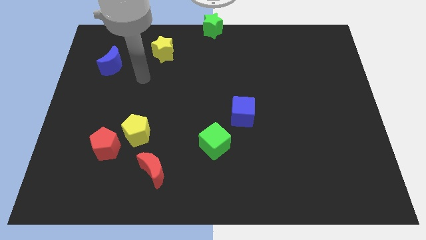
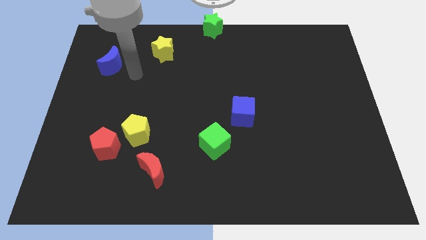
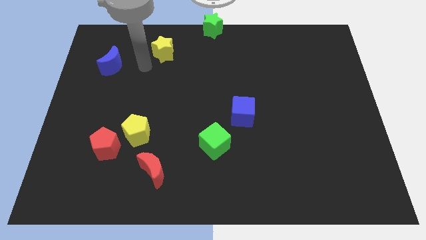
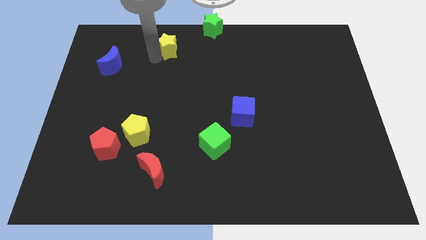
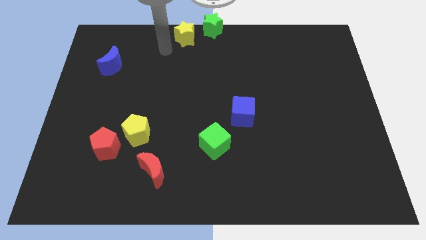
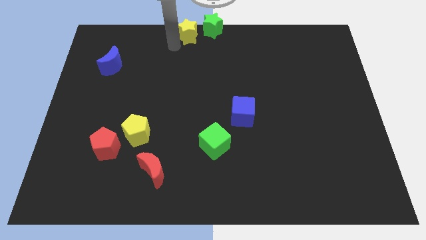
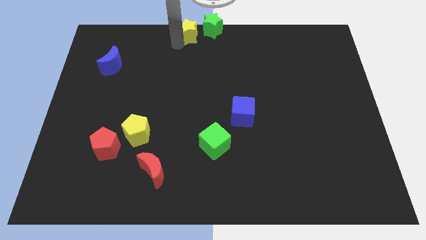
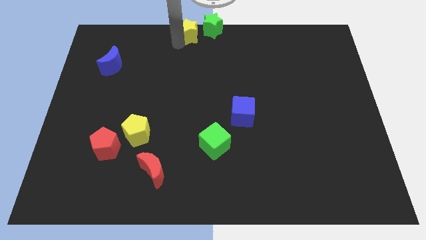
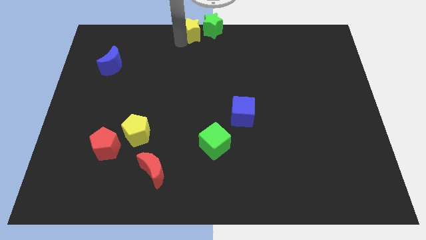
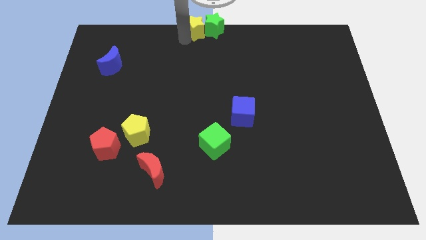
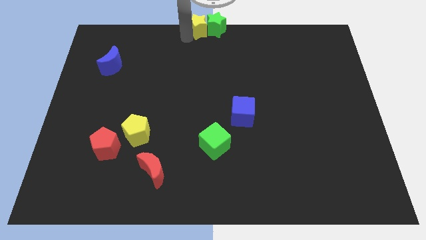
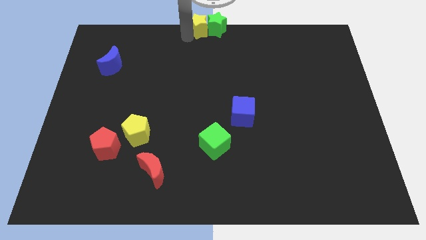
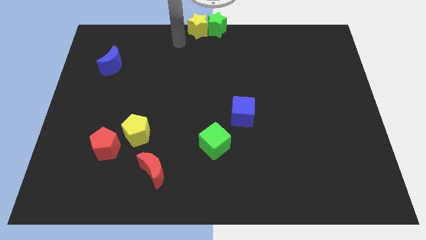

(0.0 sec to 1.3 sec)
move the yellow star towards the left side of the green star

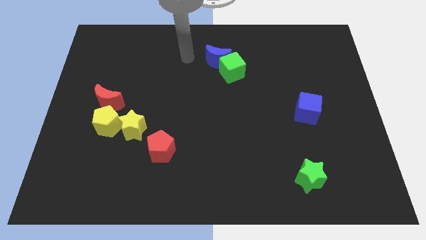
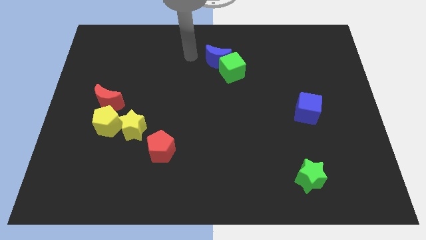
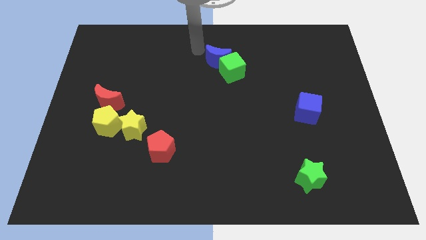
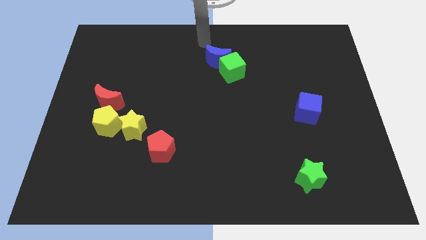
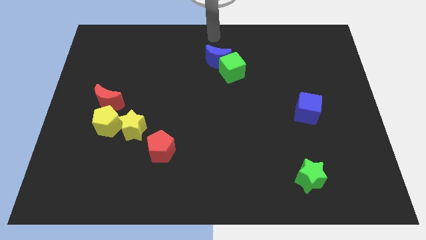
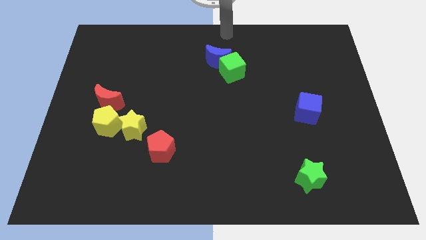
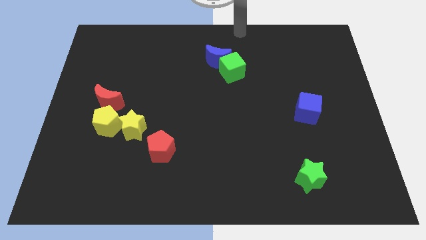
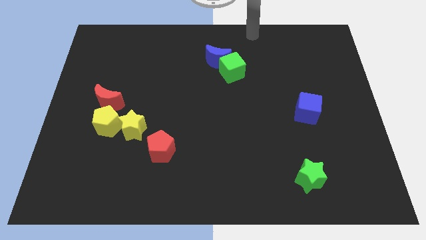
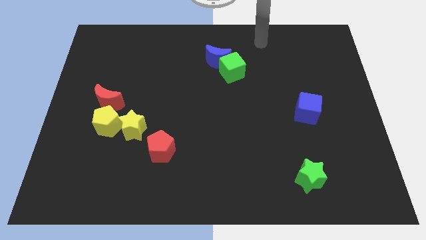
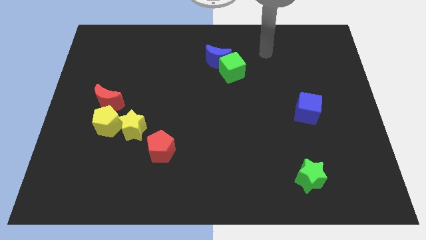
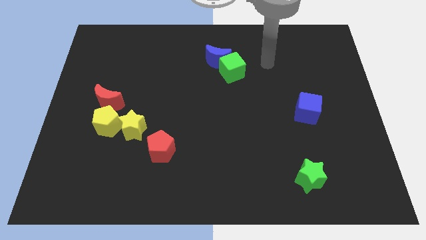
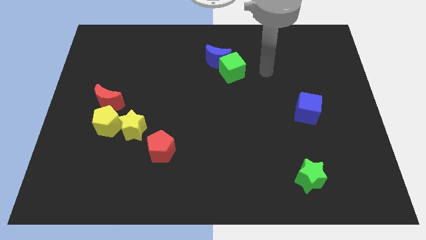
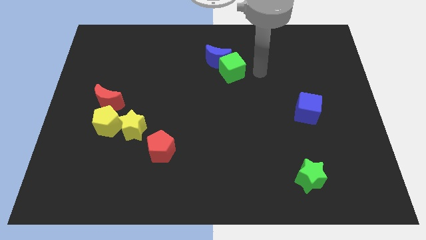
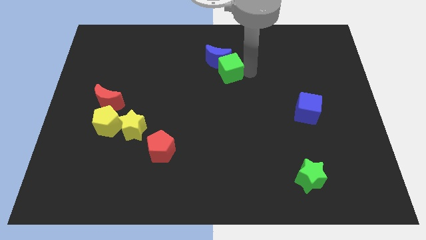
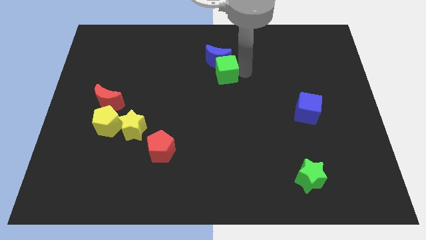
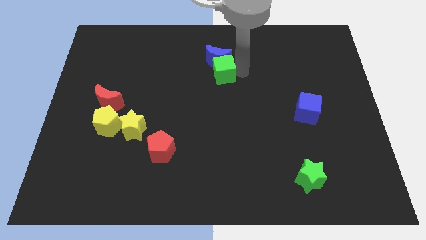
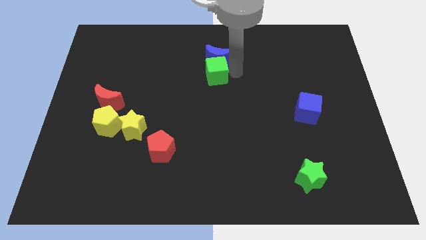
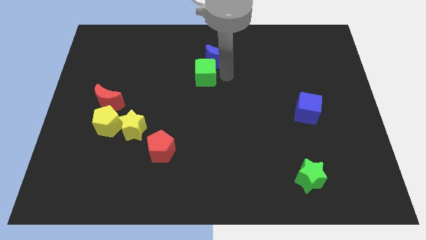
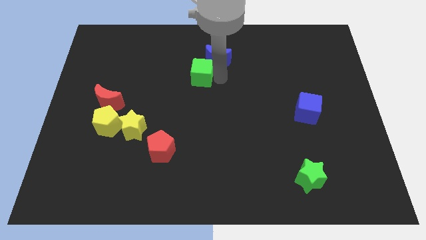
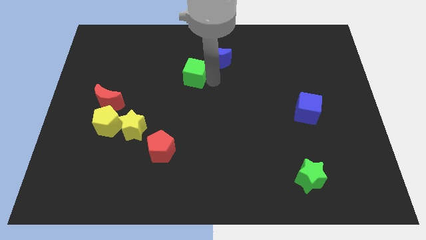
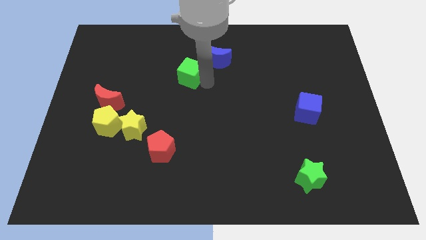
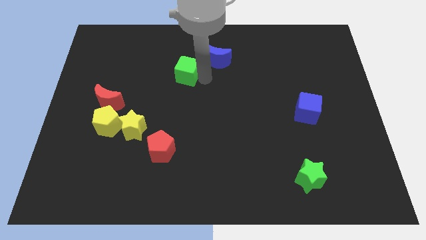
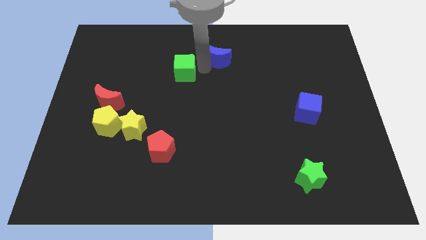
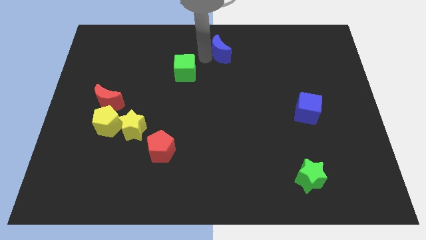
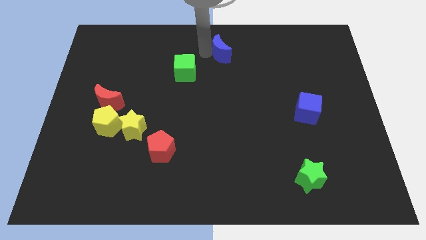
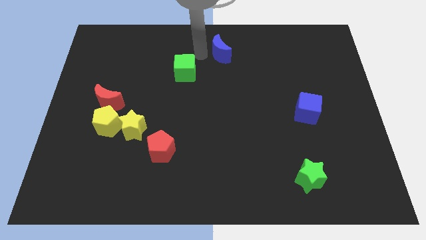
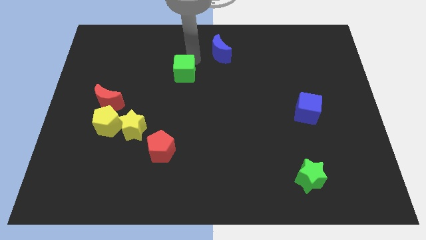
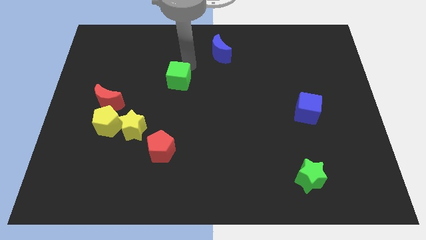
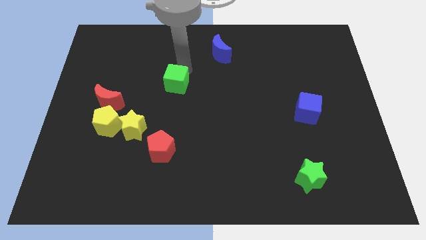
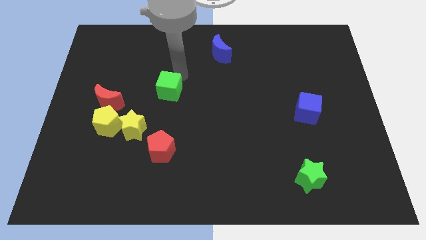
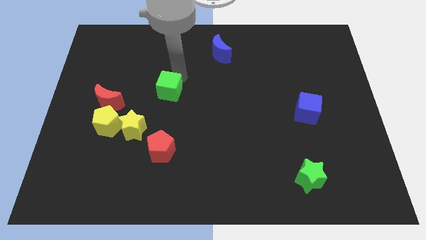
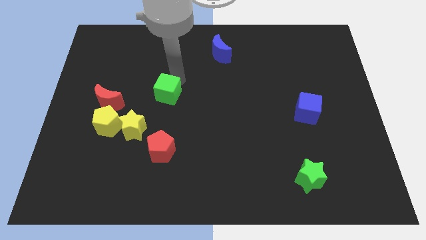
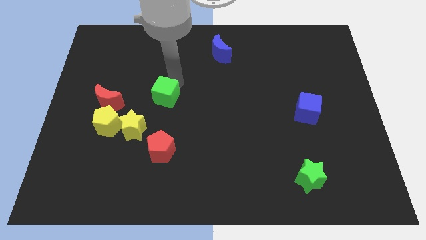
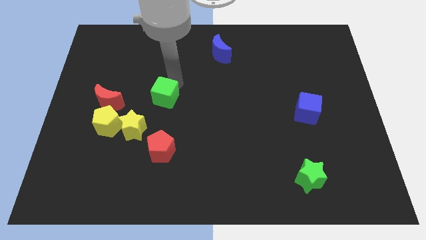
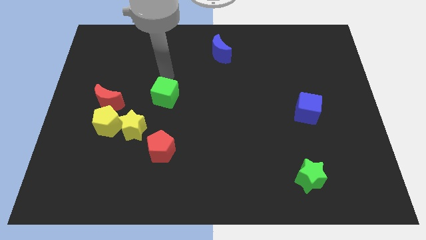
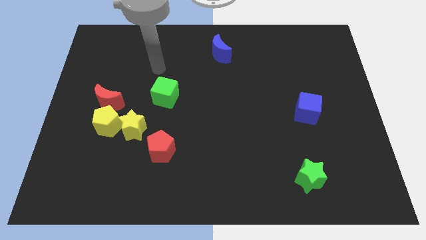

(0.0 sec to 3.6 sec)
push the green cube to the top side of the red pentagon

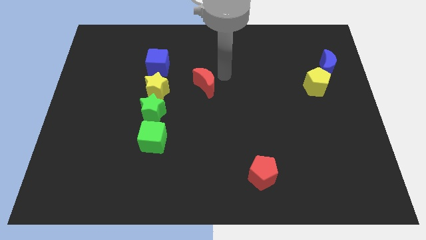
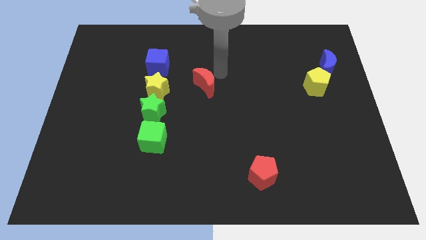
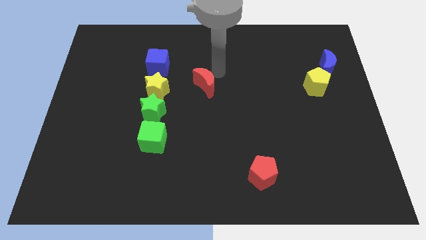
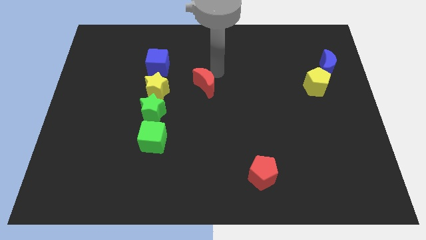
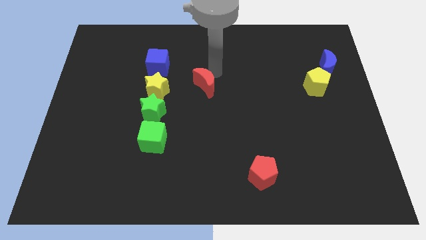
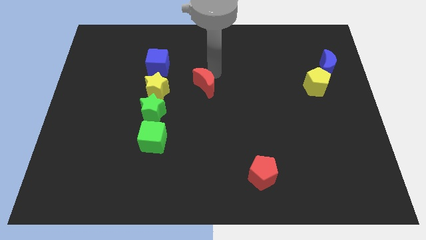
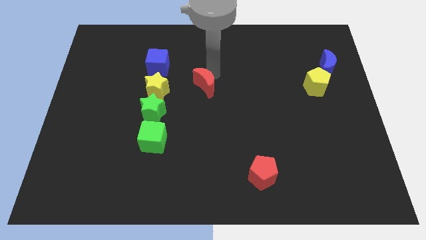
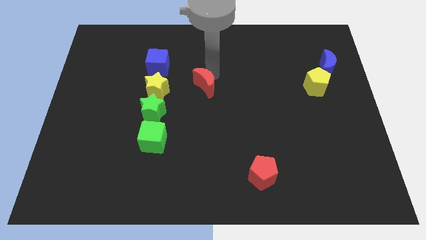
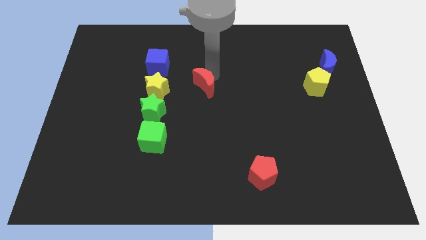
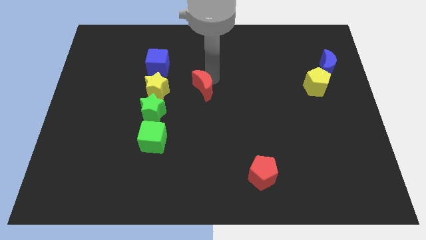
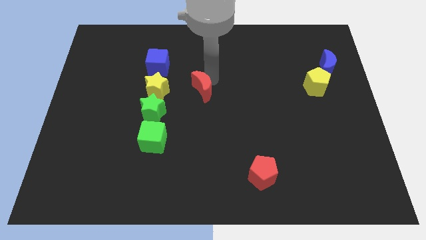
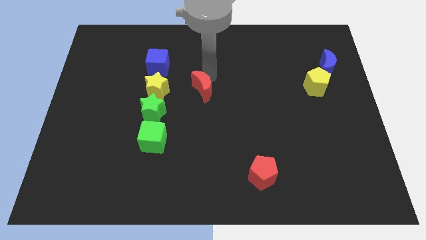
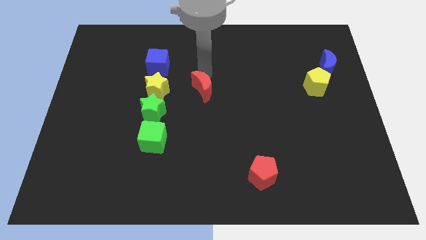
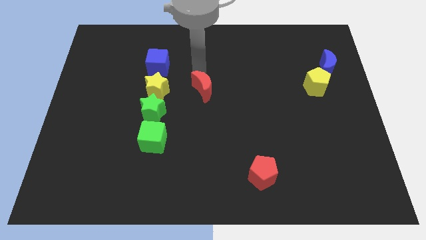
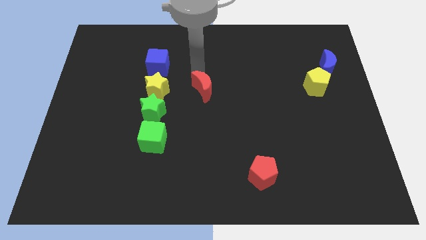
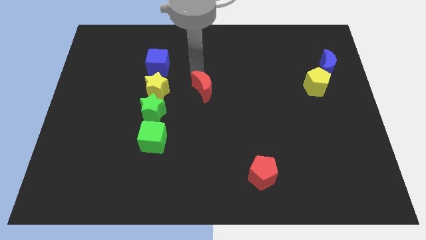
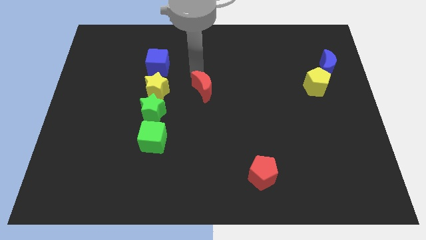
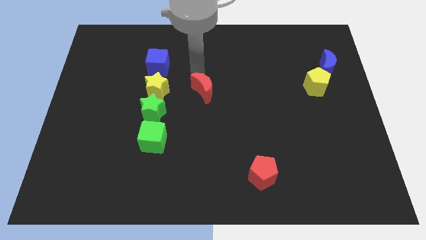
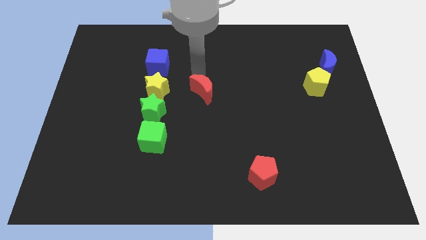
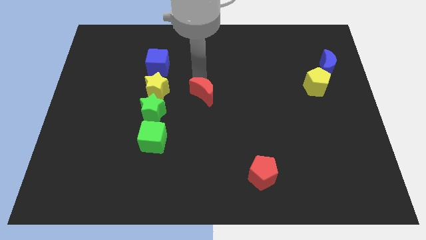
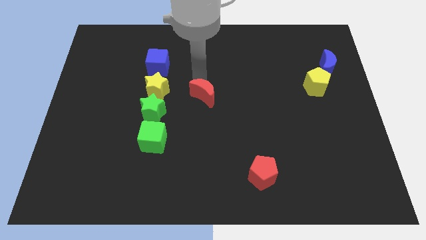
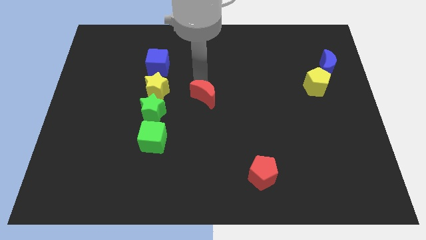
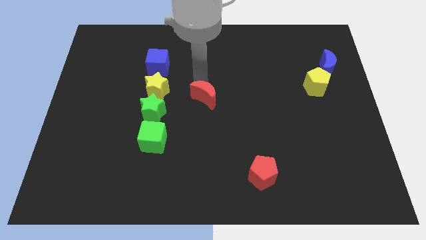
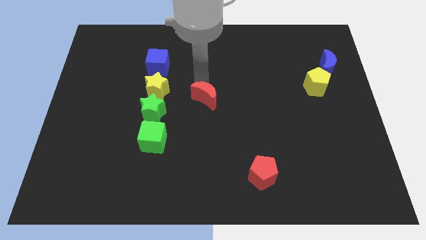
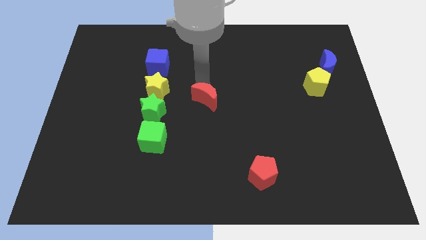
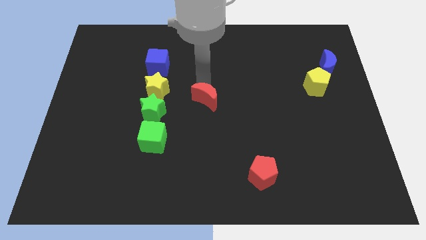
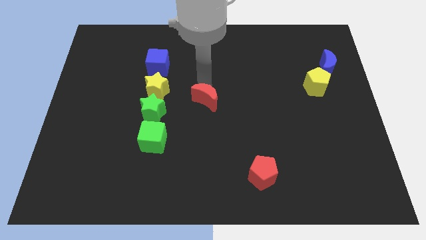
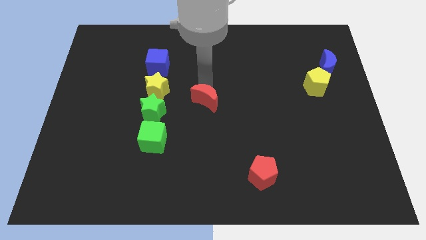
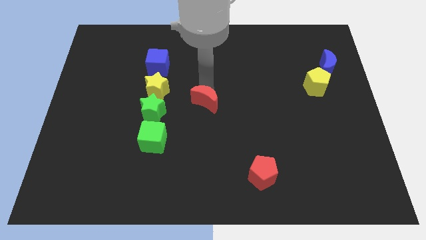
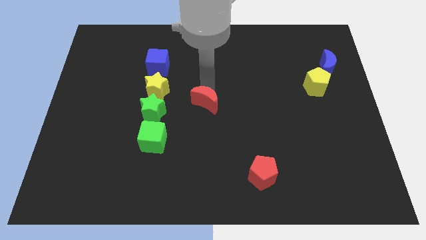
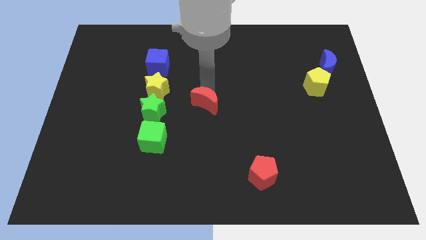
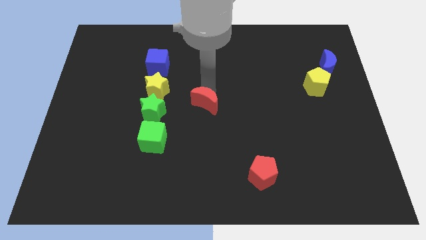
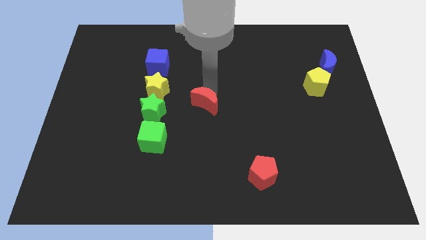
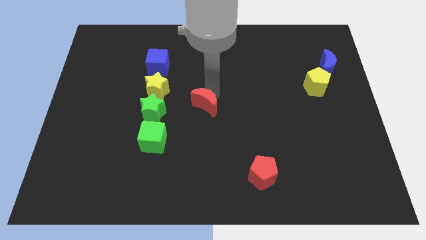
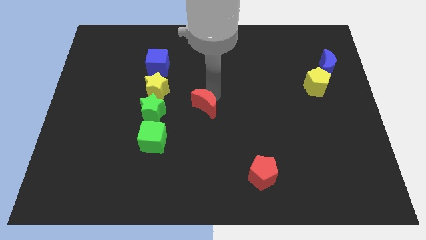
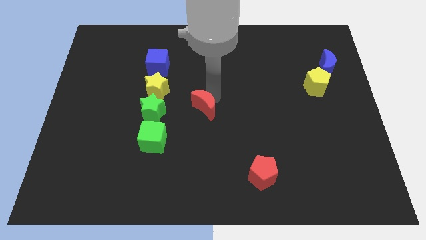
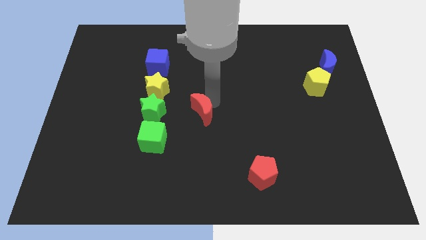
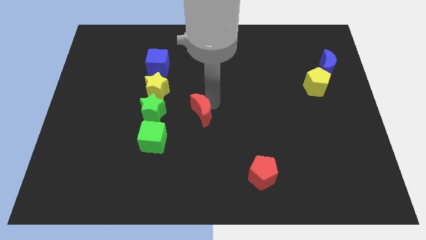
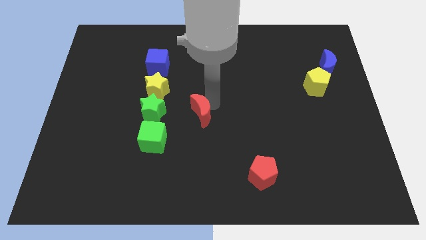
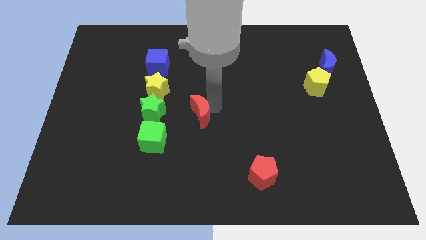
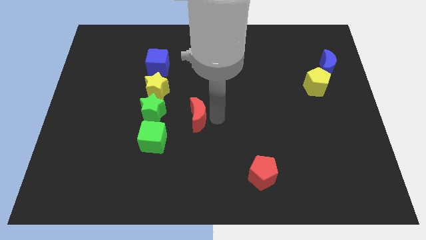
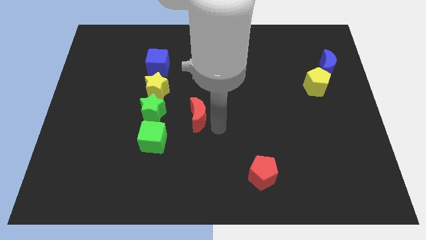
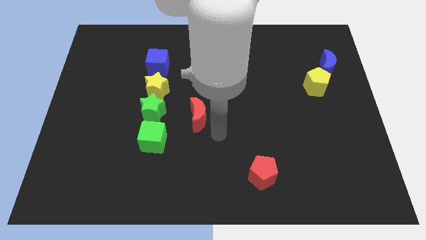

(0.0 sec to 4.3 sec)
move the red crescent diagonal to the right of the green star
